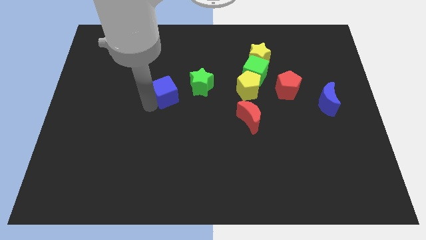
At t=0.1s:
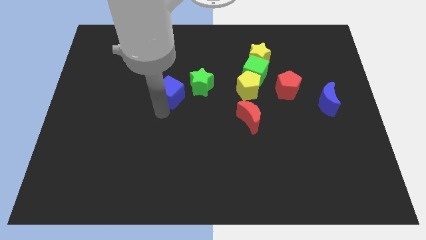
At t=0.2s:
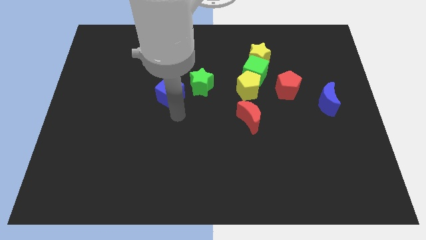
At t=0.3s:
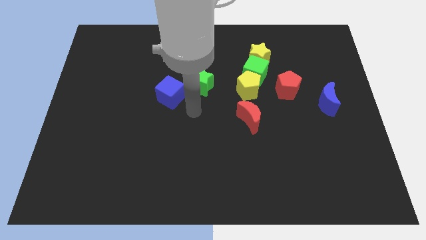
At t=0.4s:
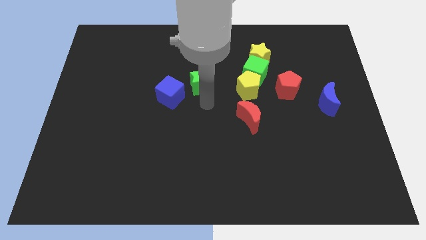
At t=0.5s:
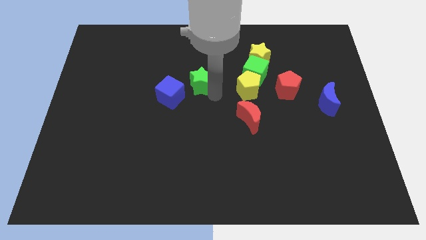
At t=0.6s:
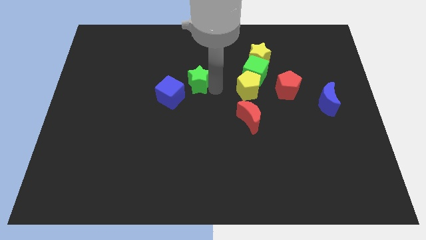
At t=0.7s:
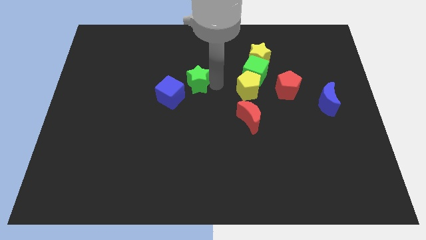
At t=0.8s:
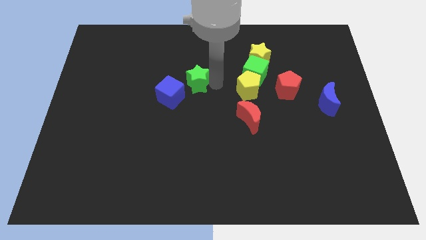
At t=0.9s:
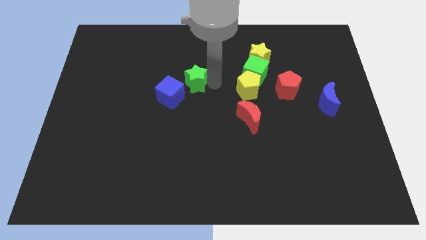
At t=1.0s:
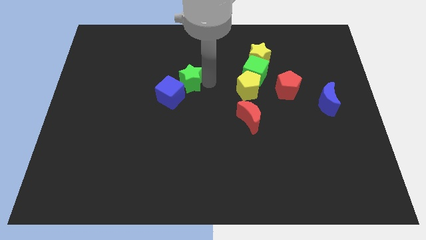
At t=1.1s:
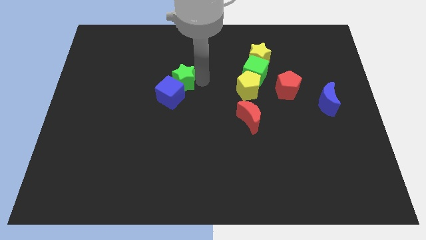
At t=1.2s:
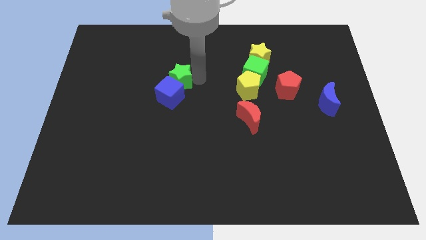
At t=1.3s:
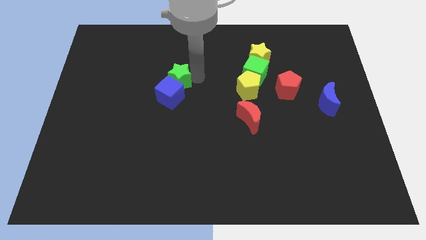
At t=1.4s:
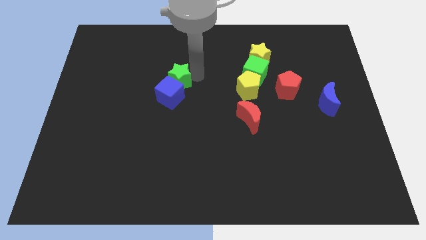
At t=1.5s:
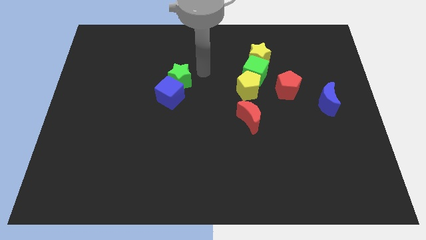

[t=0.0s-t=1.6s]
place green star to the top of blue cube

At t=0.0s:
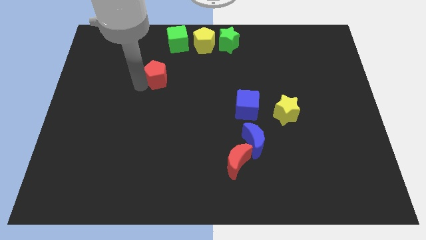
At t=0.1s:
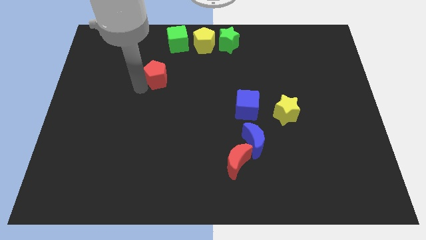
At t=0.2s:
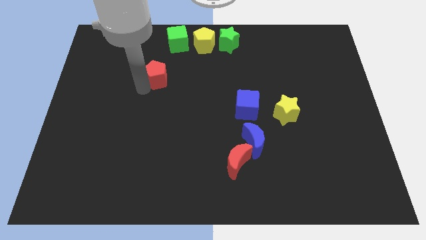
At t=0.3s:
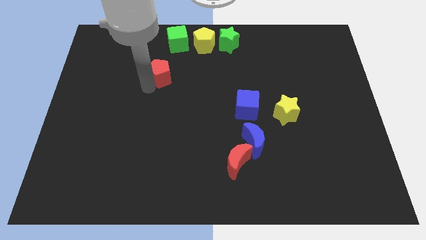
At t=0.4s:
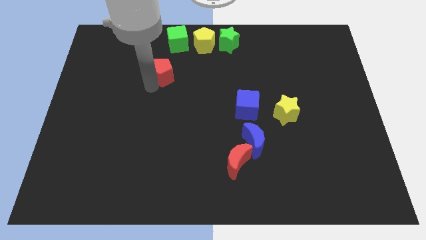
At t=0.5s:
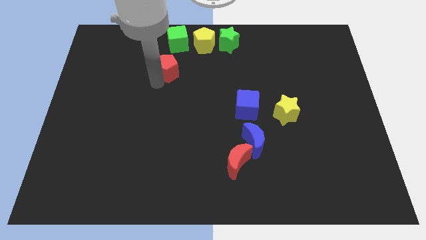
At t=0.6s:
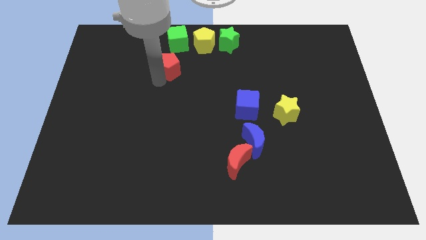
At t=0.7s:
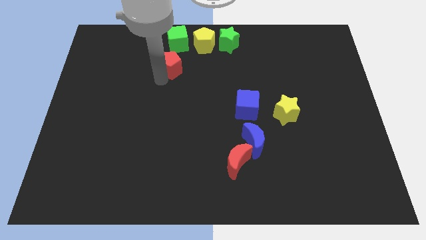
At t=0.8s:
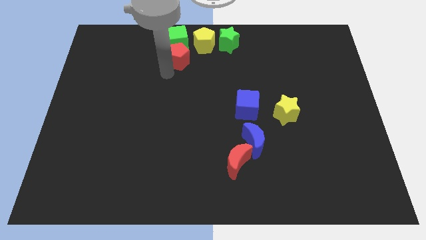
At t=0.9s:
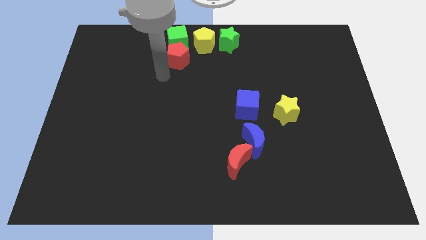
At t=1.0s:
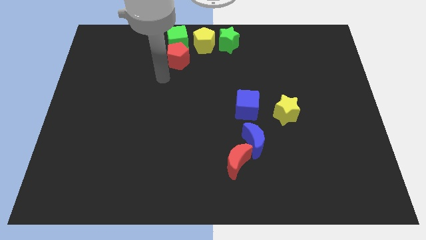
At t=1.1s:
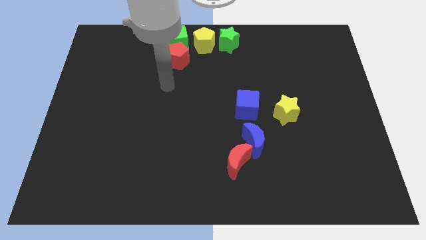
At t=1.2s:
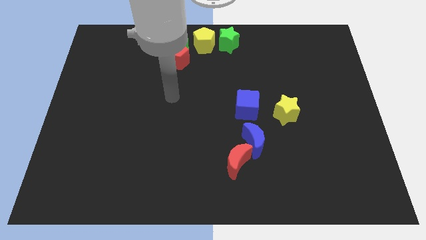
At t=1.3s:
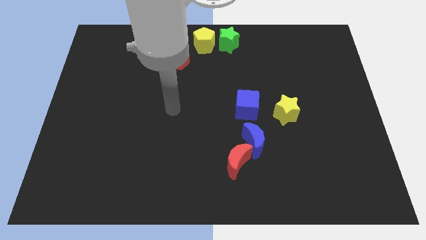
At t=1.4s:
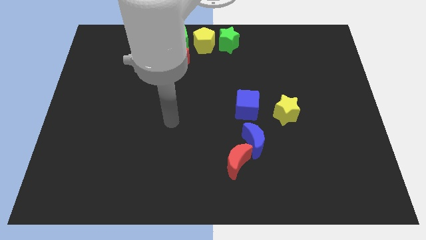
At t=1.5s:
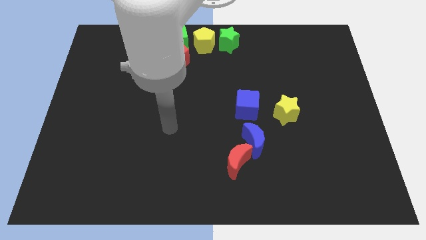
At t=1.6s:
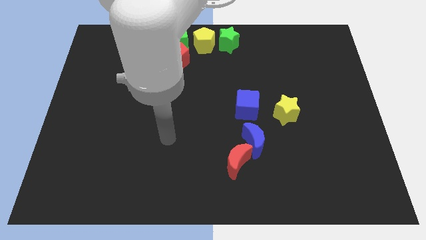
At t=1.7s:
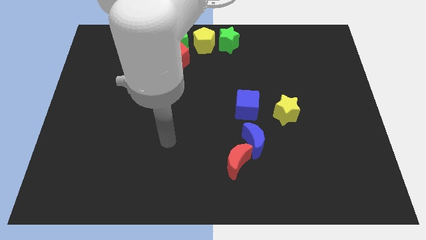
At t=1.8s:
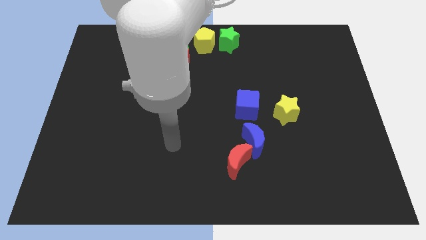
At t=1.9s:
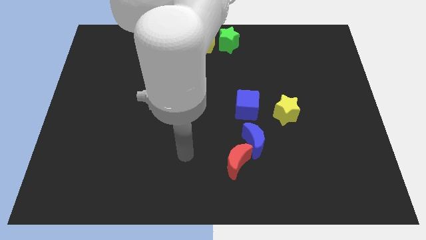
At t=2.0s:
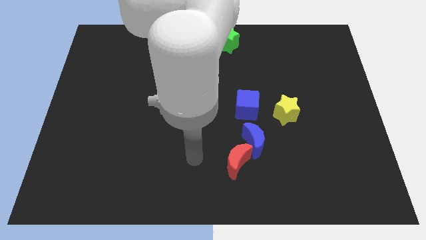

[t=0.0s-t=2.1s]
push red pentagon below the green cube

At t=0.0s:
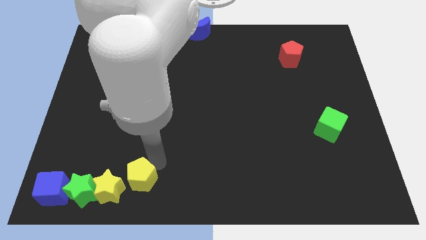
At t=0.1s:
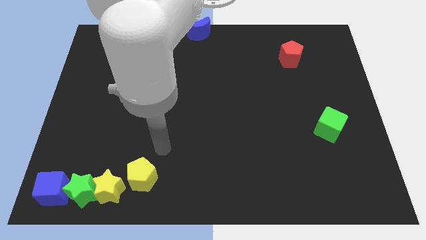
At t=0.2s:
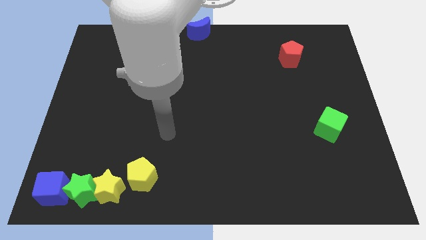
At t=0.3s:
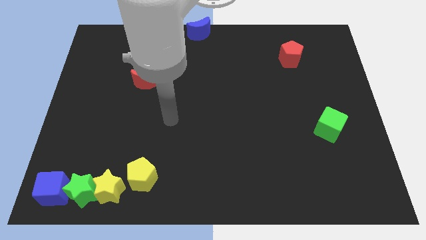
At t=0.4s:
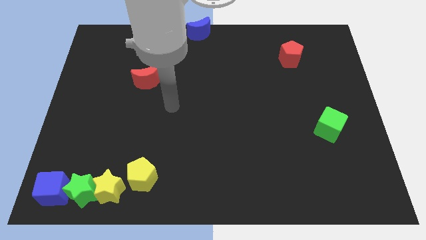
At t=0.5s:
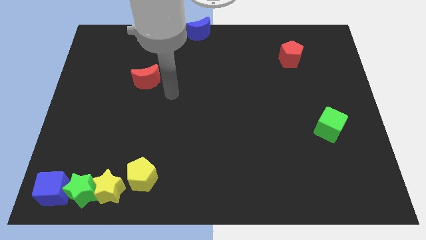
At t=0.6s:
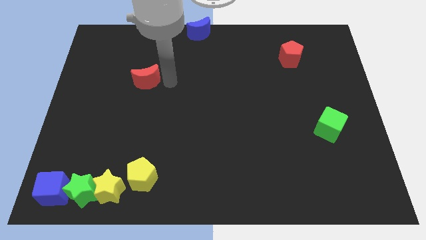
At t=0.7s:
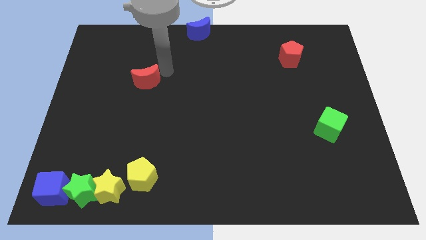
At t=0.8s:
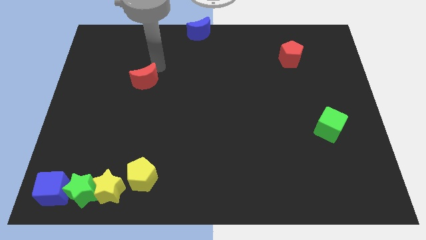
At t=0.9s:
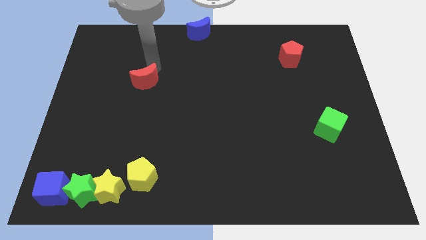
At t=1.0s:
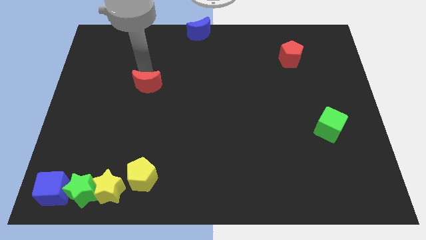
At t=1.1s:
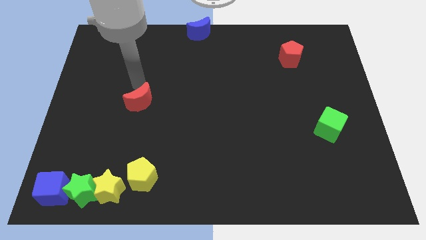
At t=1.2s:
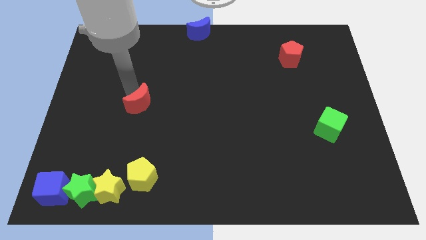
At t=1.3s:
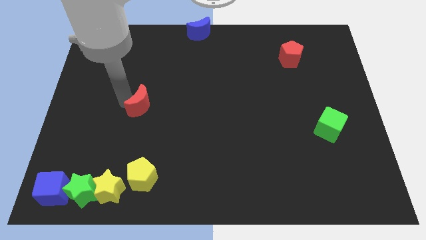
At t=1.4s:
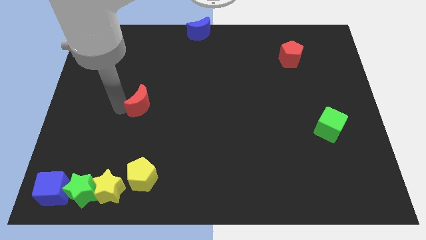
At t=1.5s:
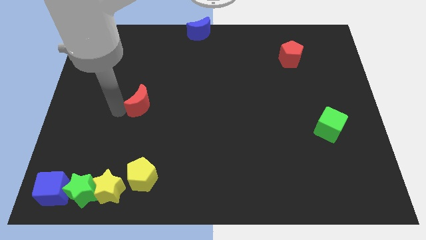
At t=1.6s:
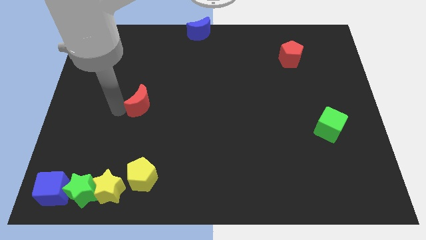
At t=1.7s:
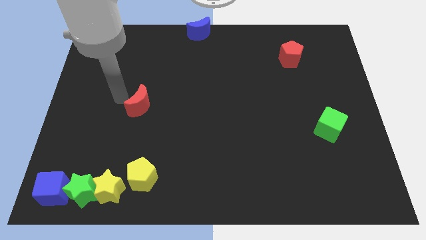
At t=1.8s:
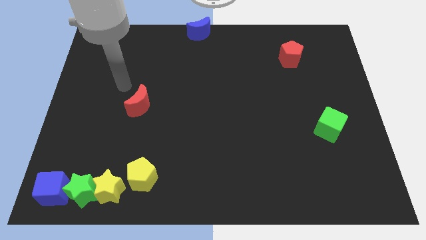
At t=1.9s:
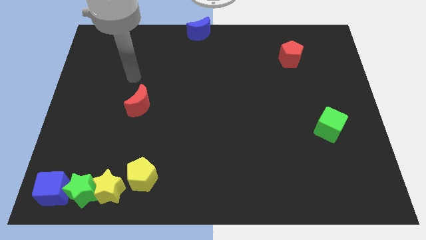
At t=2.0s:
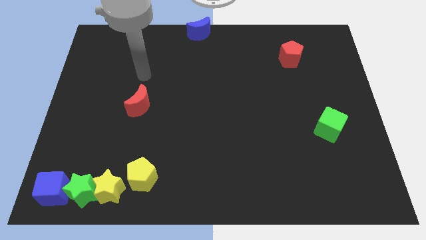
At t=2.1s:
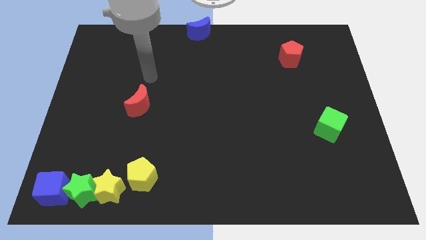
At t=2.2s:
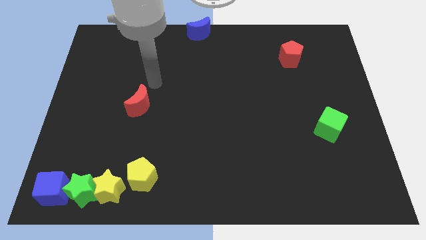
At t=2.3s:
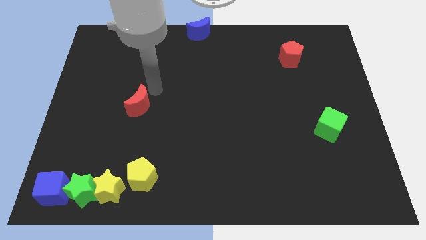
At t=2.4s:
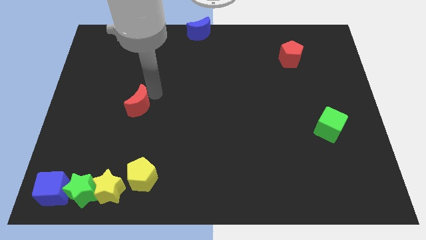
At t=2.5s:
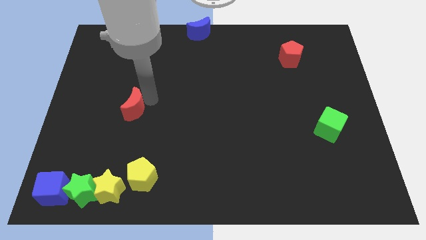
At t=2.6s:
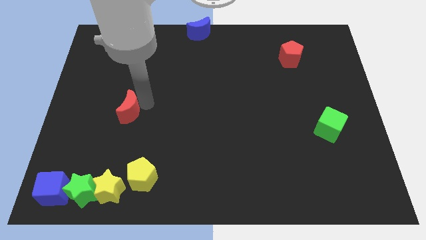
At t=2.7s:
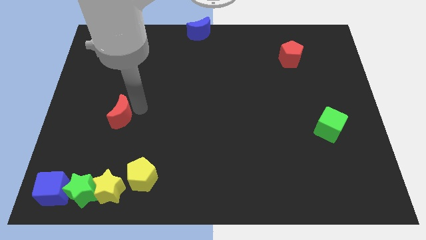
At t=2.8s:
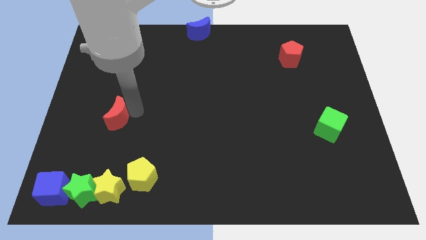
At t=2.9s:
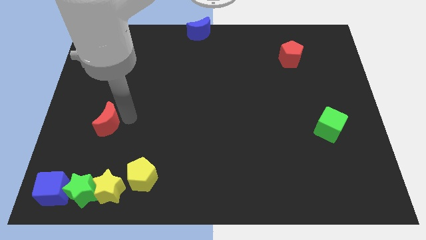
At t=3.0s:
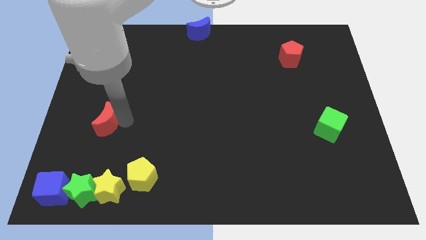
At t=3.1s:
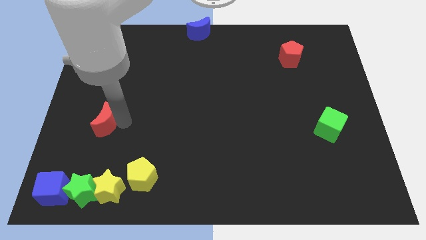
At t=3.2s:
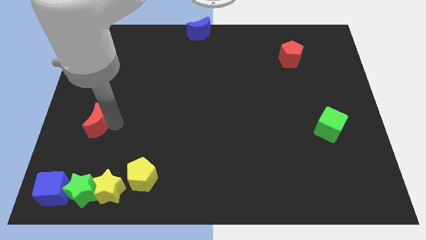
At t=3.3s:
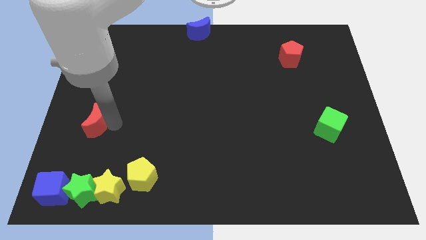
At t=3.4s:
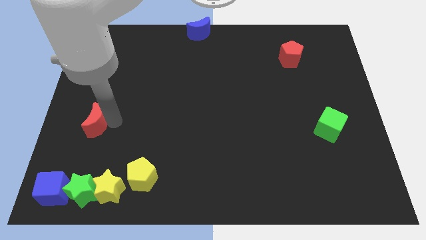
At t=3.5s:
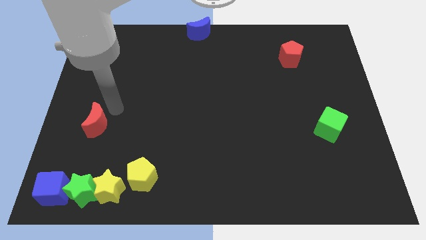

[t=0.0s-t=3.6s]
move the red crescent to the top of the green star

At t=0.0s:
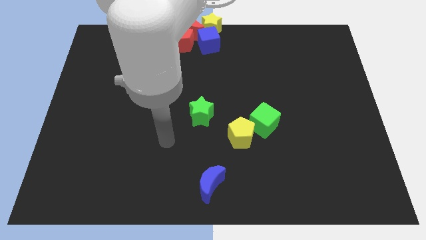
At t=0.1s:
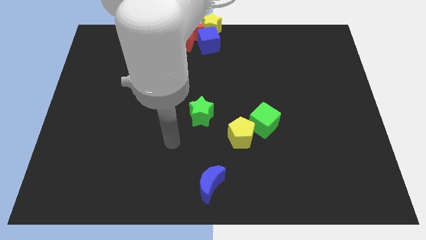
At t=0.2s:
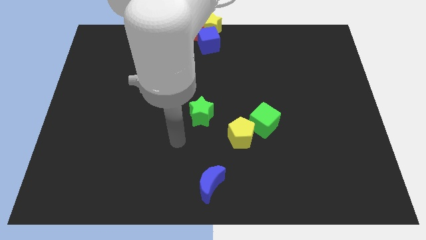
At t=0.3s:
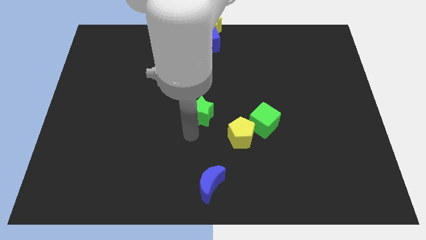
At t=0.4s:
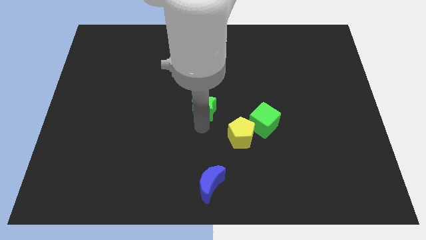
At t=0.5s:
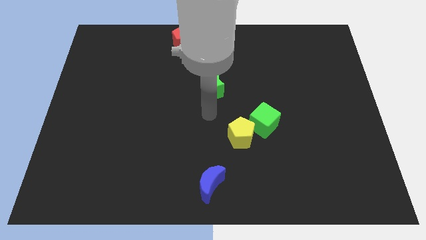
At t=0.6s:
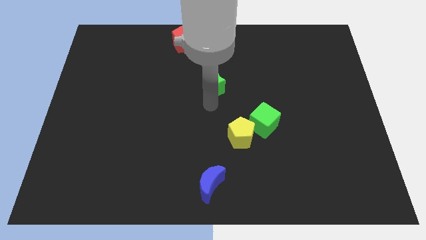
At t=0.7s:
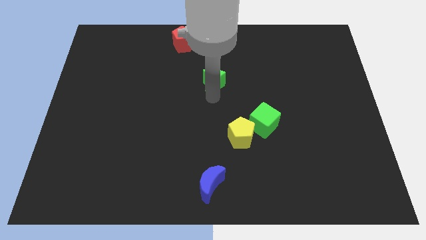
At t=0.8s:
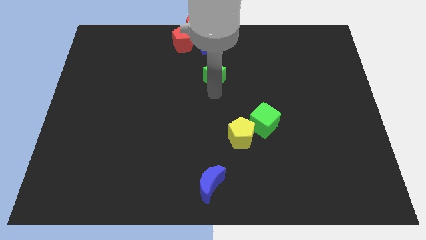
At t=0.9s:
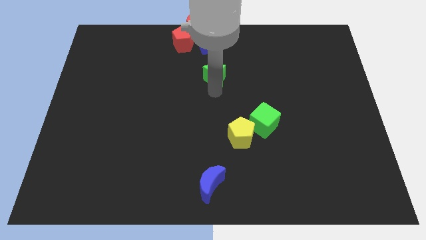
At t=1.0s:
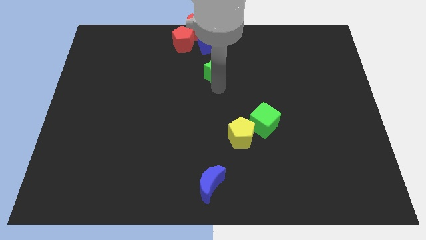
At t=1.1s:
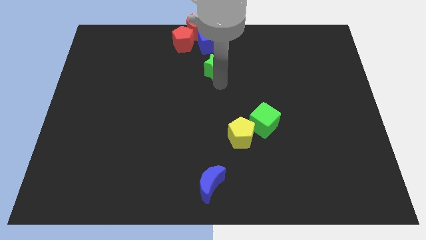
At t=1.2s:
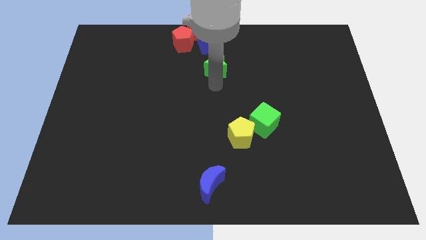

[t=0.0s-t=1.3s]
push the green star slightly towards up

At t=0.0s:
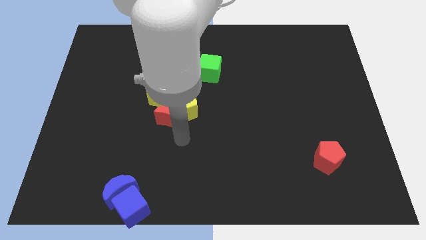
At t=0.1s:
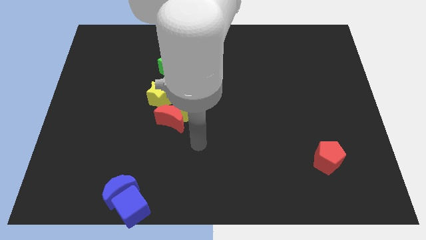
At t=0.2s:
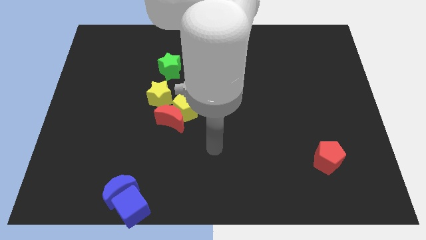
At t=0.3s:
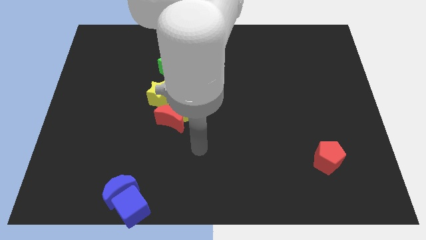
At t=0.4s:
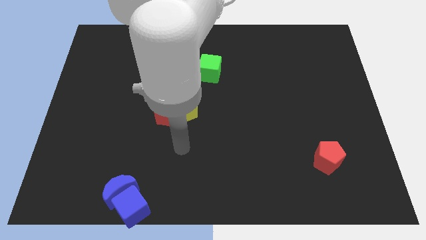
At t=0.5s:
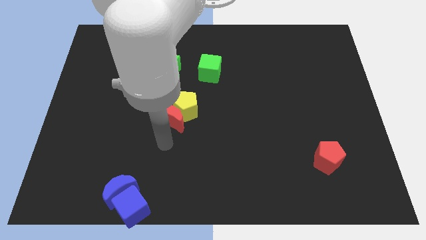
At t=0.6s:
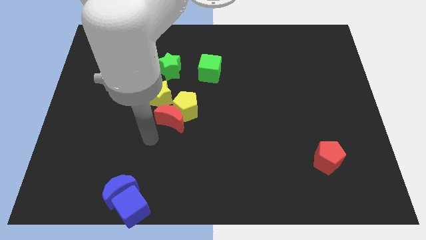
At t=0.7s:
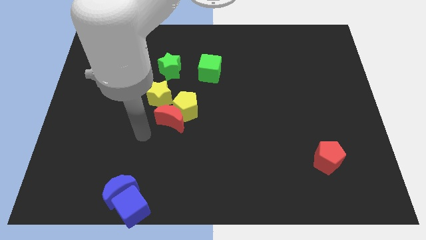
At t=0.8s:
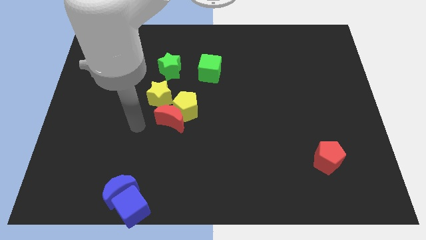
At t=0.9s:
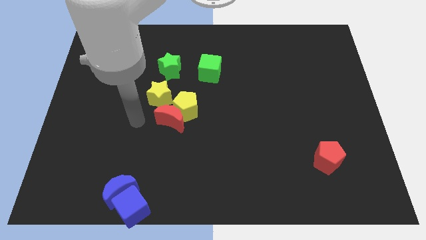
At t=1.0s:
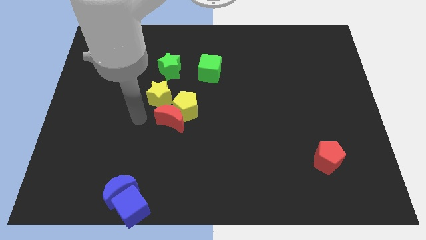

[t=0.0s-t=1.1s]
point your arm at the left side of the red crescent
